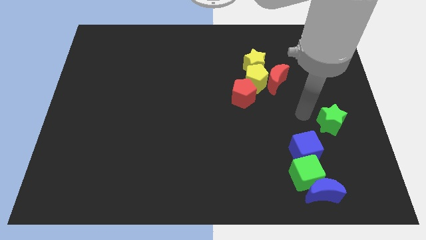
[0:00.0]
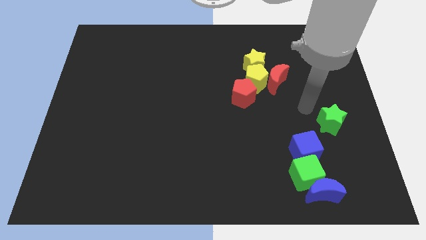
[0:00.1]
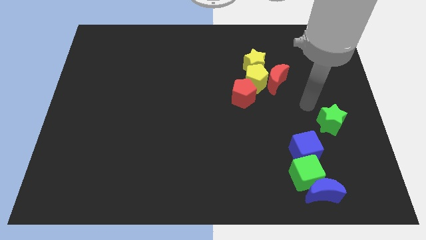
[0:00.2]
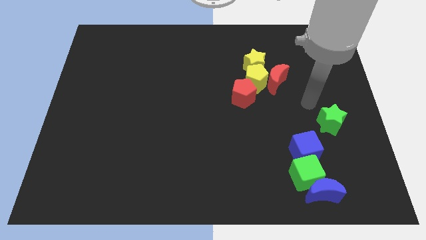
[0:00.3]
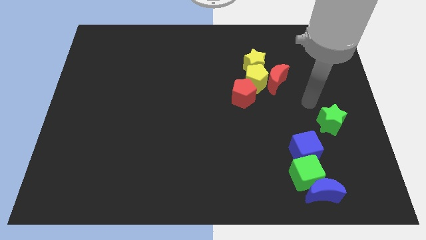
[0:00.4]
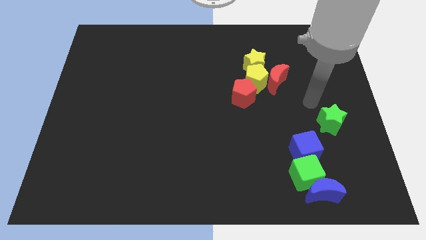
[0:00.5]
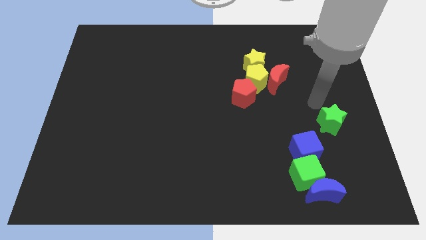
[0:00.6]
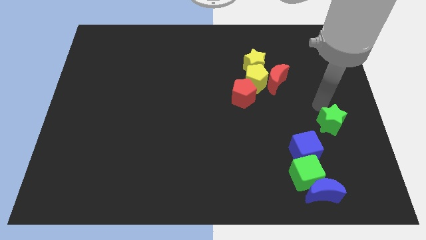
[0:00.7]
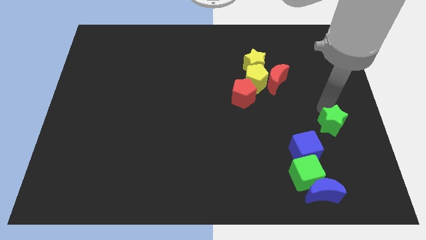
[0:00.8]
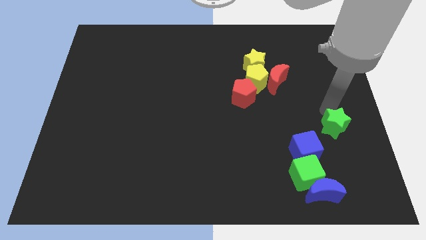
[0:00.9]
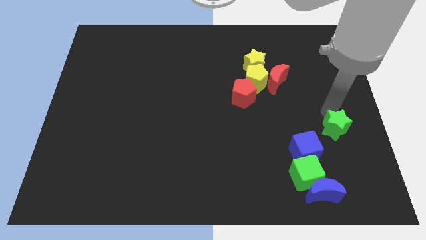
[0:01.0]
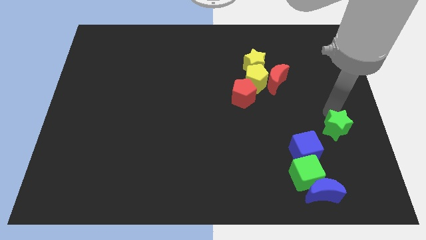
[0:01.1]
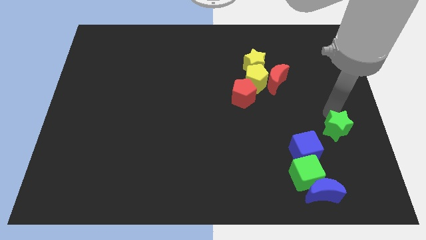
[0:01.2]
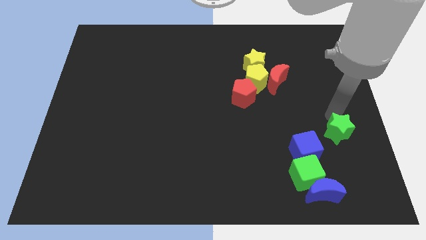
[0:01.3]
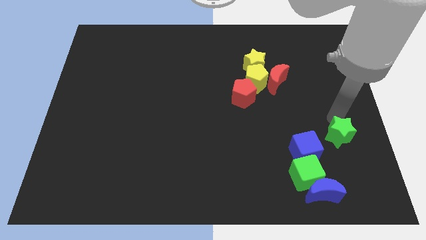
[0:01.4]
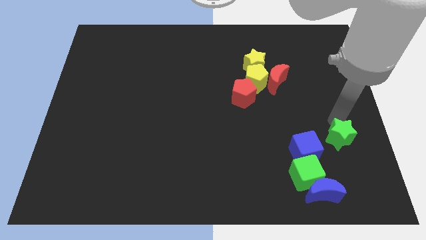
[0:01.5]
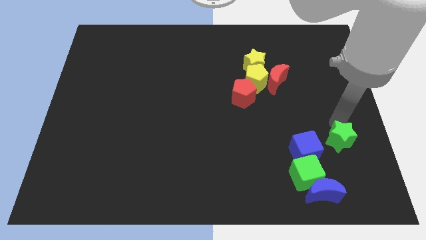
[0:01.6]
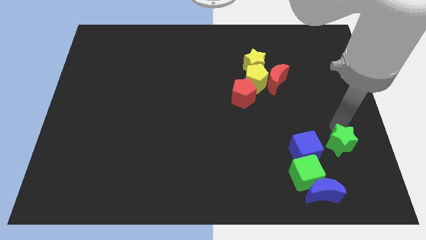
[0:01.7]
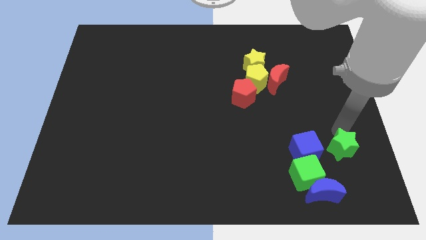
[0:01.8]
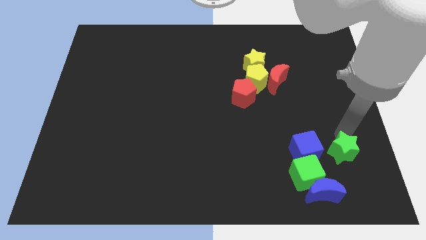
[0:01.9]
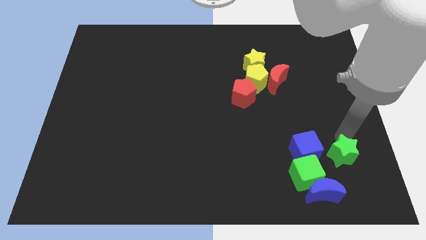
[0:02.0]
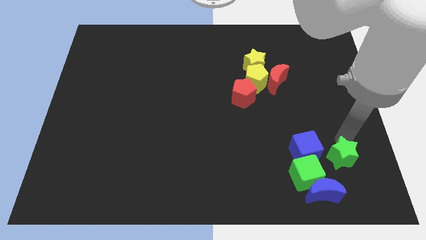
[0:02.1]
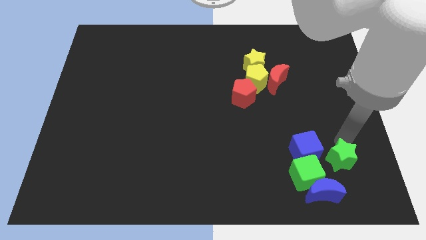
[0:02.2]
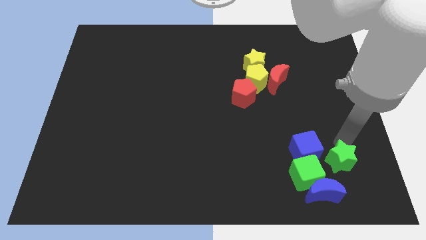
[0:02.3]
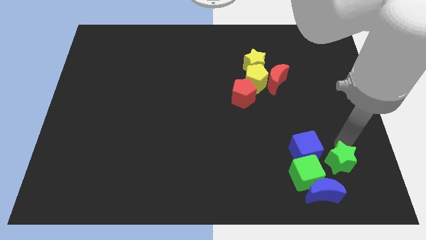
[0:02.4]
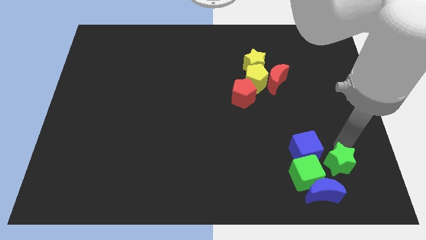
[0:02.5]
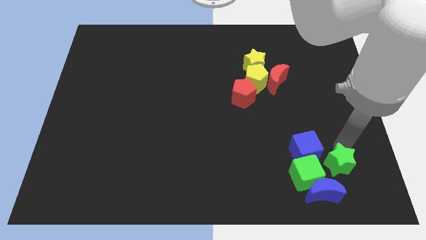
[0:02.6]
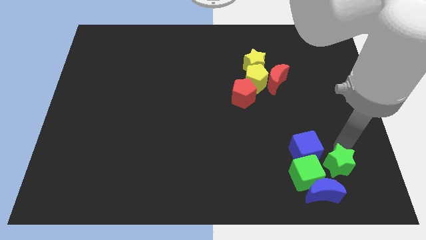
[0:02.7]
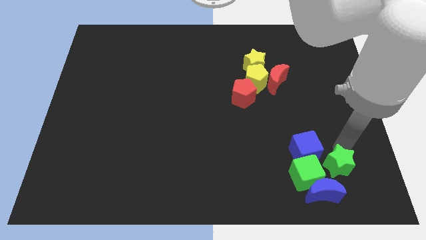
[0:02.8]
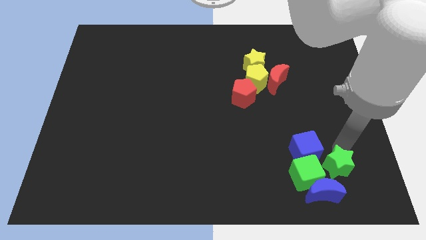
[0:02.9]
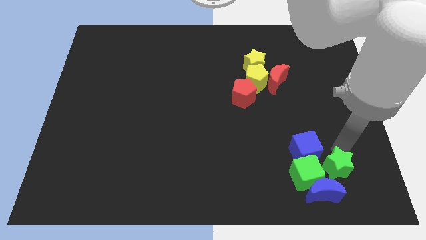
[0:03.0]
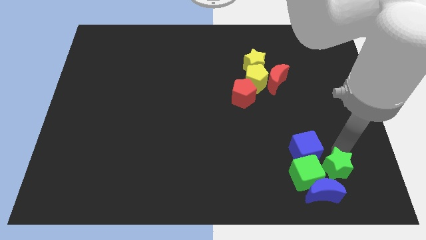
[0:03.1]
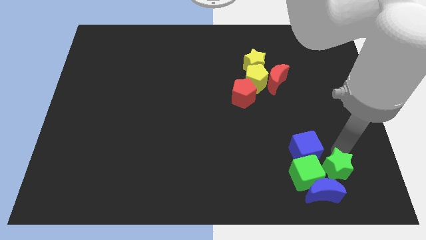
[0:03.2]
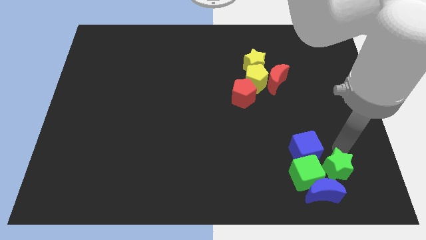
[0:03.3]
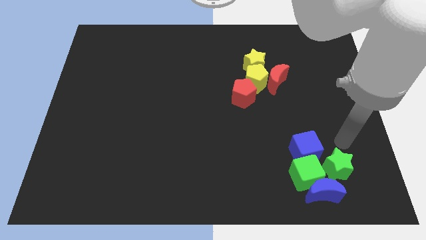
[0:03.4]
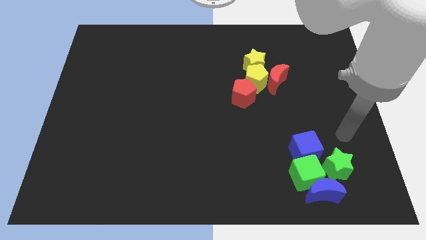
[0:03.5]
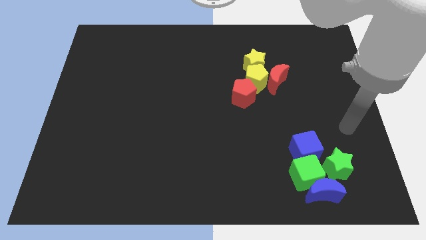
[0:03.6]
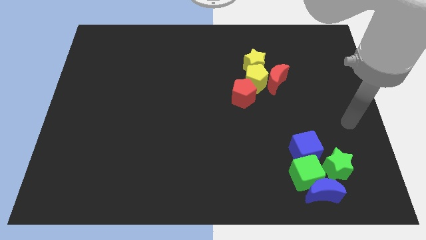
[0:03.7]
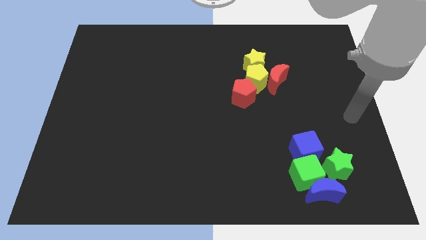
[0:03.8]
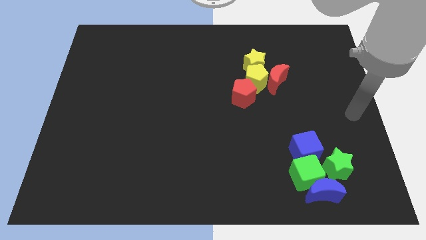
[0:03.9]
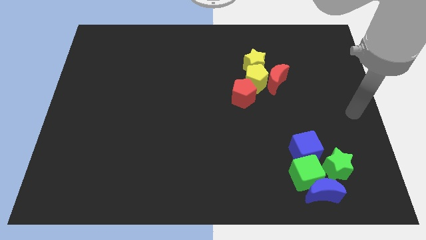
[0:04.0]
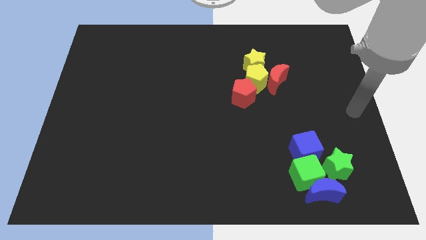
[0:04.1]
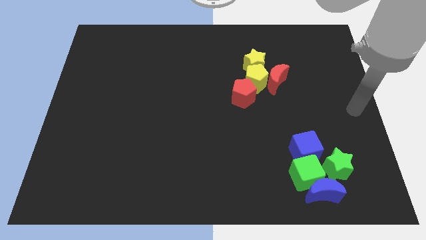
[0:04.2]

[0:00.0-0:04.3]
push the green star to the right side of the green cube

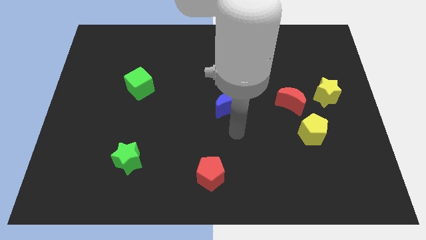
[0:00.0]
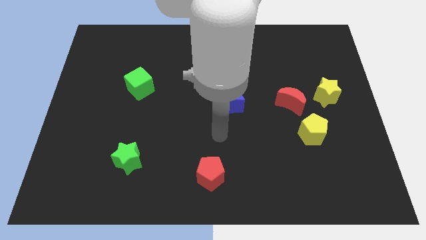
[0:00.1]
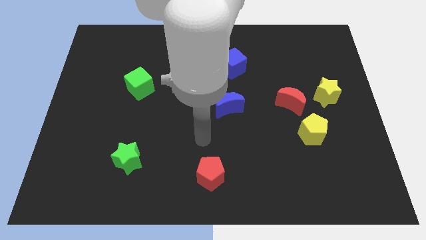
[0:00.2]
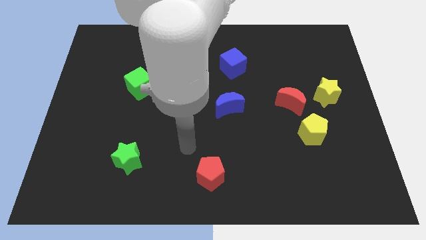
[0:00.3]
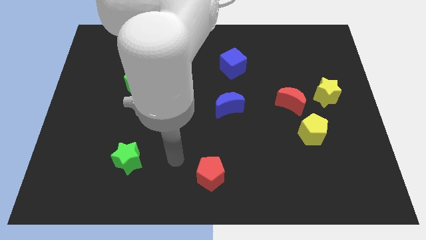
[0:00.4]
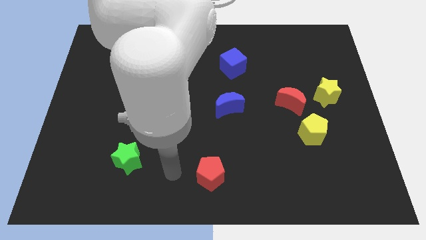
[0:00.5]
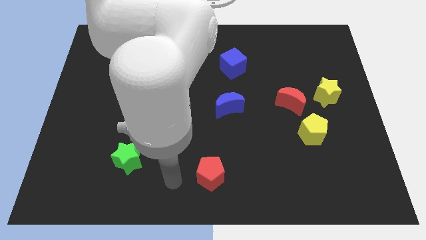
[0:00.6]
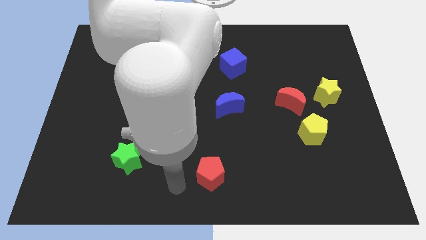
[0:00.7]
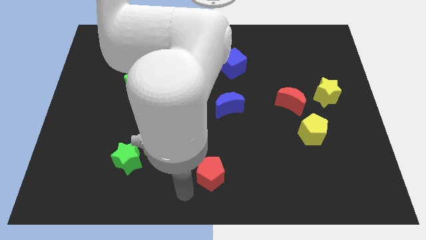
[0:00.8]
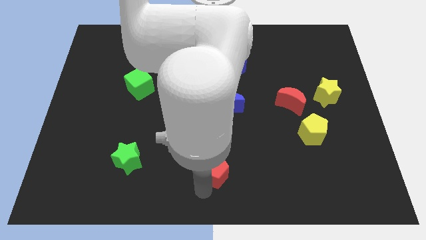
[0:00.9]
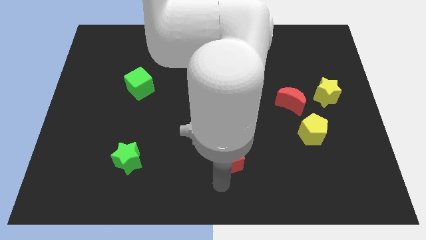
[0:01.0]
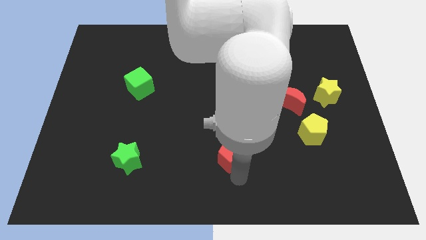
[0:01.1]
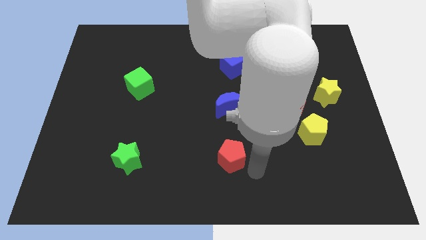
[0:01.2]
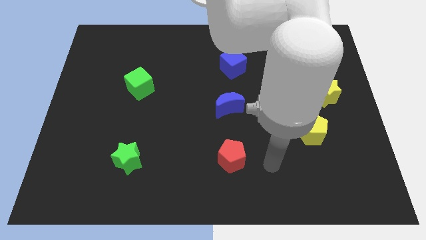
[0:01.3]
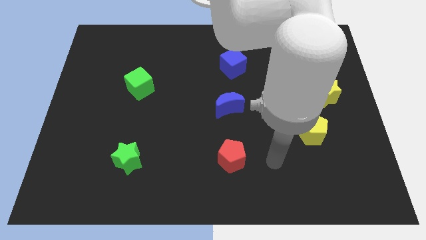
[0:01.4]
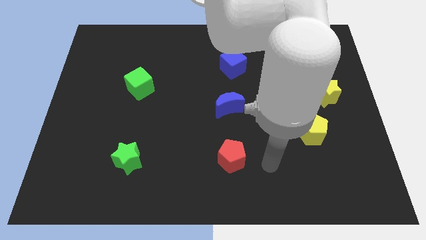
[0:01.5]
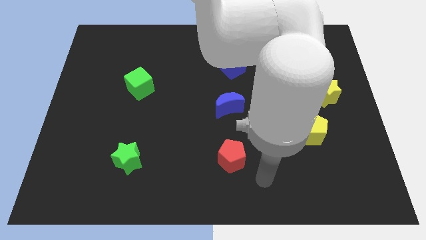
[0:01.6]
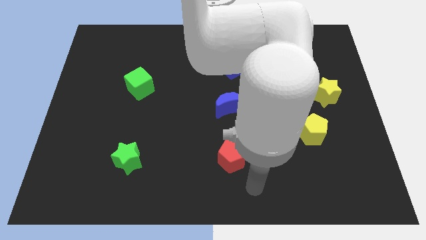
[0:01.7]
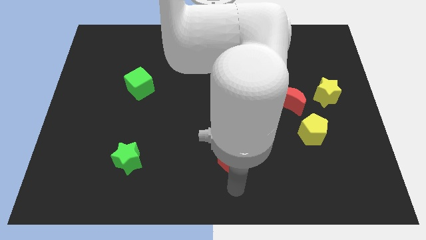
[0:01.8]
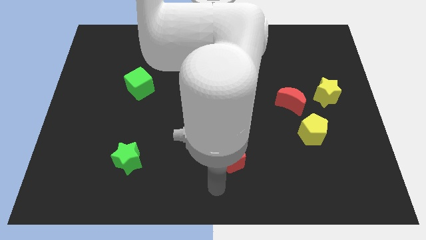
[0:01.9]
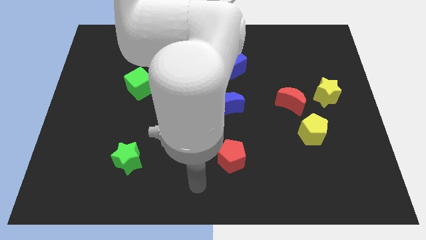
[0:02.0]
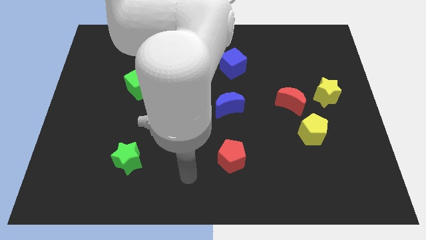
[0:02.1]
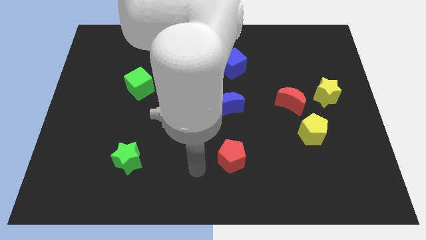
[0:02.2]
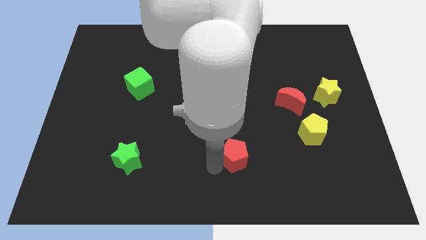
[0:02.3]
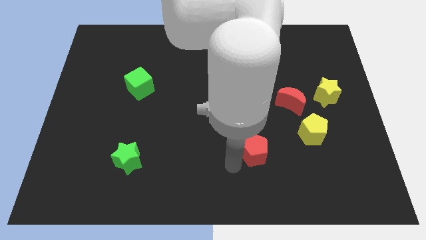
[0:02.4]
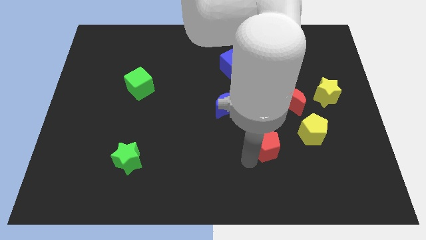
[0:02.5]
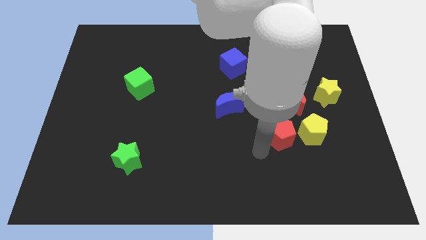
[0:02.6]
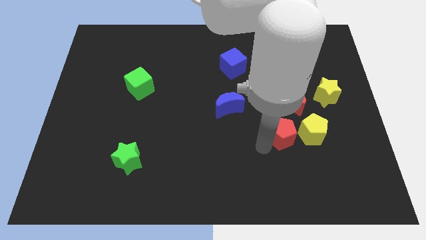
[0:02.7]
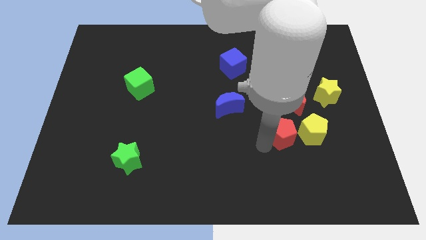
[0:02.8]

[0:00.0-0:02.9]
place the red pentagon left to the yellow pentagon

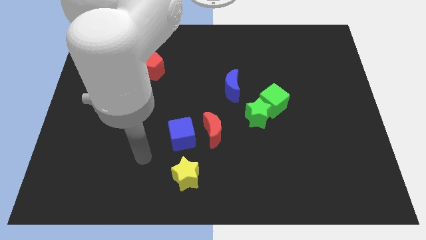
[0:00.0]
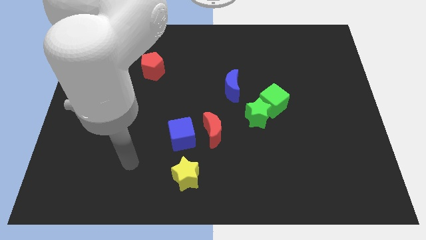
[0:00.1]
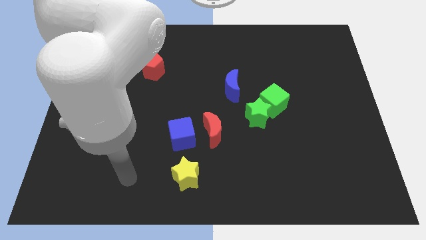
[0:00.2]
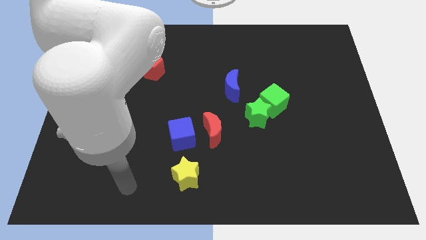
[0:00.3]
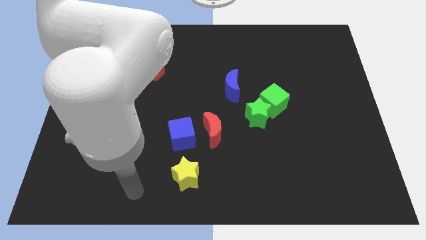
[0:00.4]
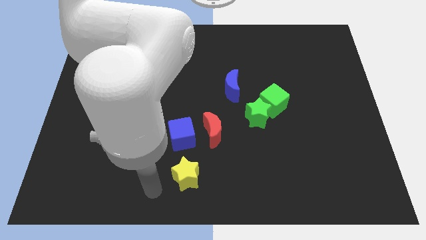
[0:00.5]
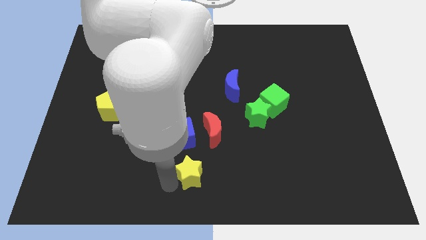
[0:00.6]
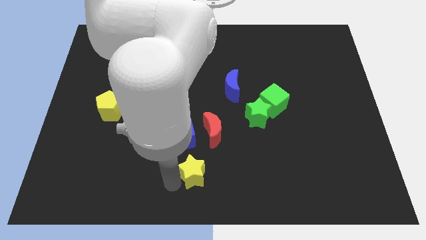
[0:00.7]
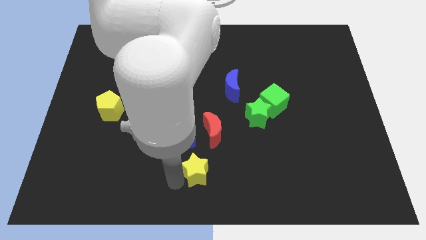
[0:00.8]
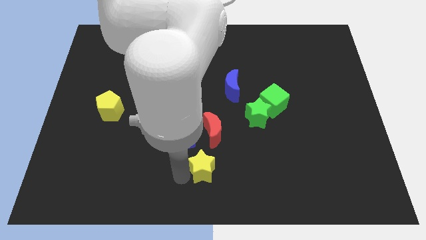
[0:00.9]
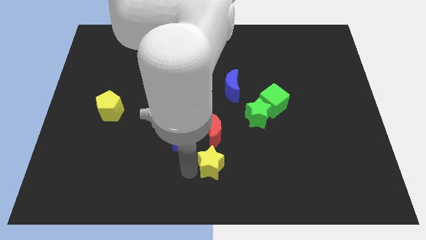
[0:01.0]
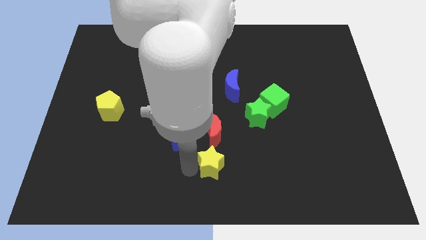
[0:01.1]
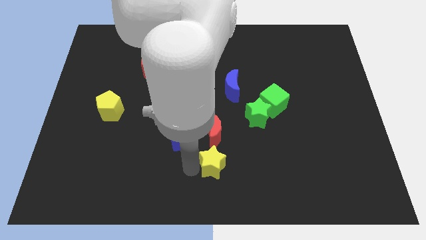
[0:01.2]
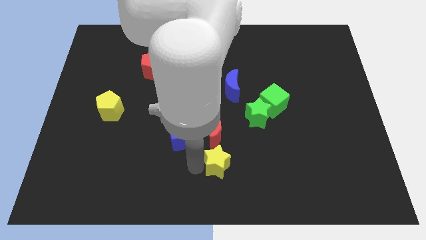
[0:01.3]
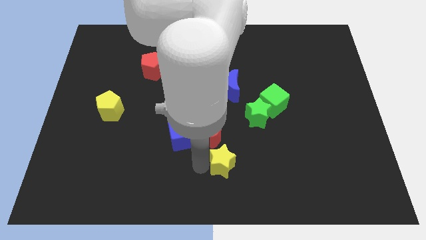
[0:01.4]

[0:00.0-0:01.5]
push the yellow star below the red moon

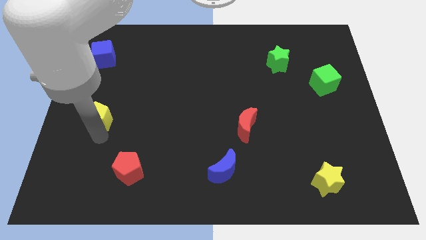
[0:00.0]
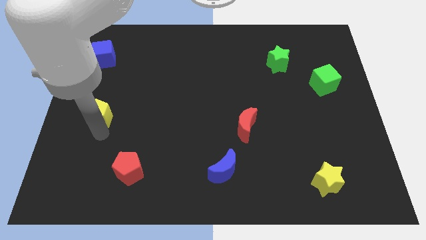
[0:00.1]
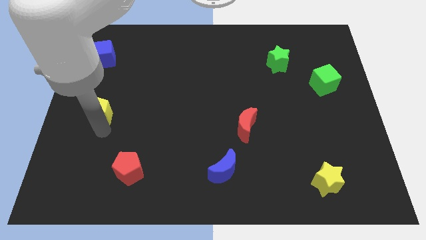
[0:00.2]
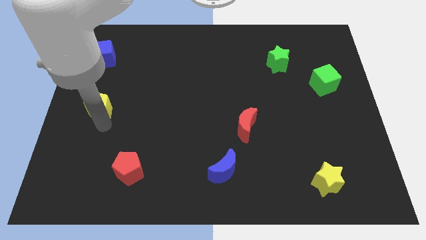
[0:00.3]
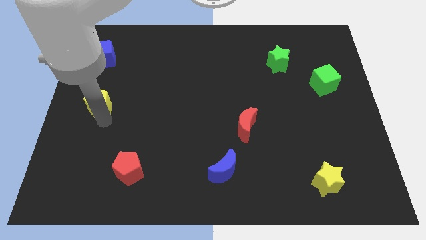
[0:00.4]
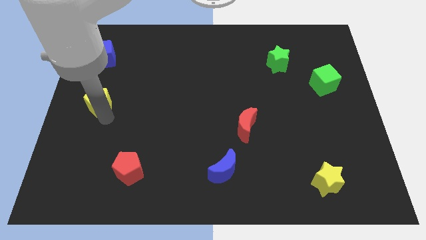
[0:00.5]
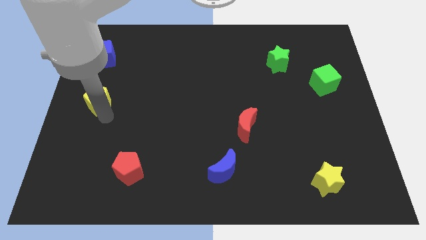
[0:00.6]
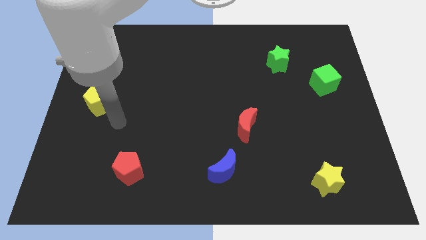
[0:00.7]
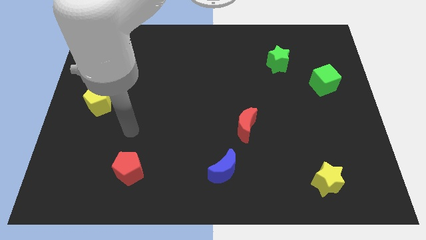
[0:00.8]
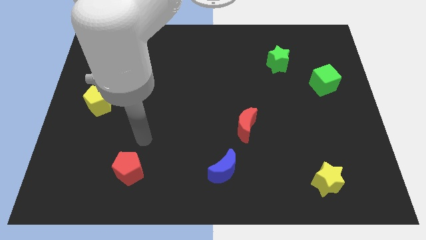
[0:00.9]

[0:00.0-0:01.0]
place yellow pentagon to the bottom of blue cube
